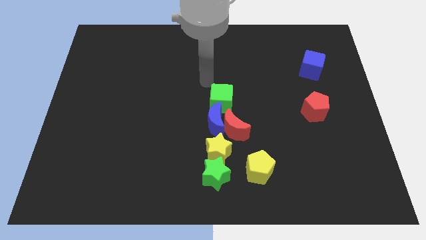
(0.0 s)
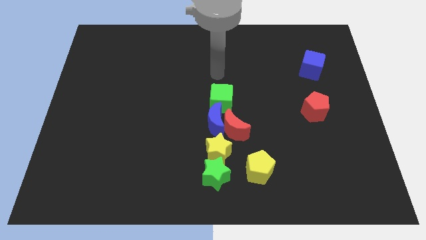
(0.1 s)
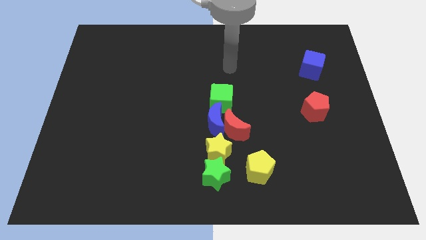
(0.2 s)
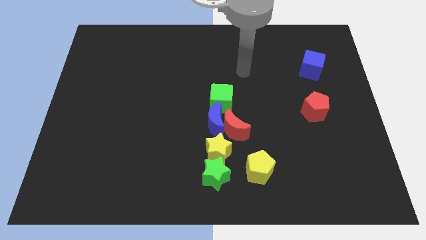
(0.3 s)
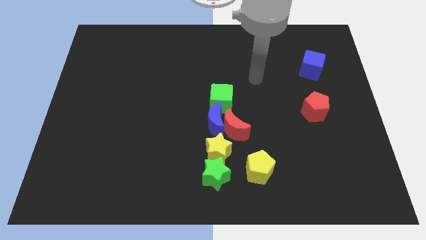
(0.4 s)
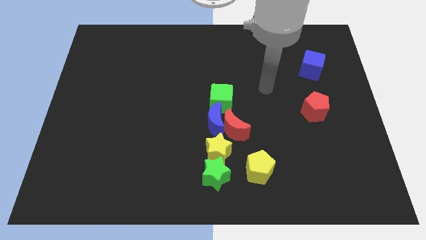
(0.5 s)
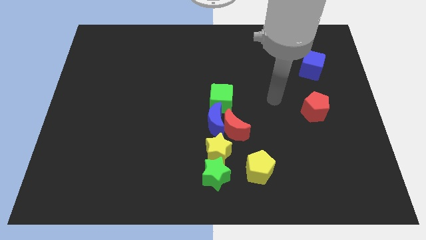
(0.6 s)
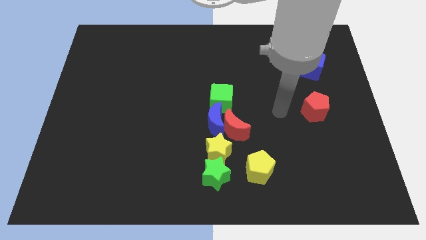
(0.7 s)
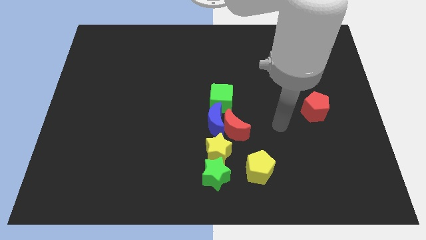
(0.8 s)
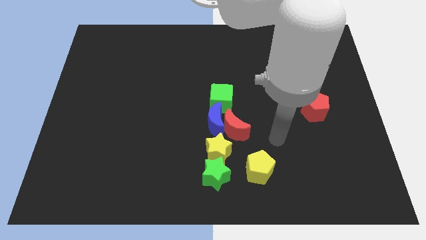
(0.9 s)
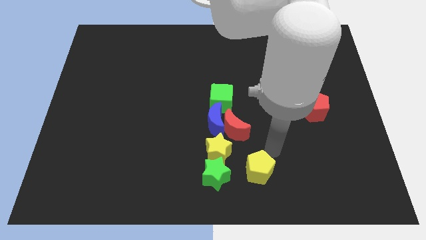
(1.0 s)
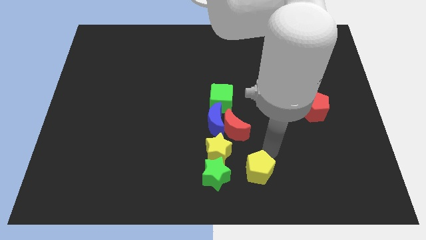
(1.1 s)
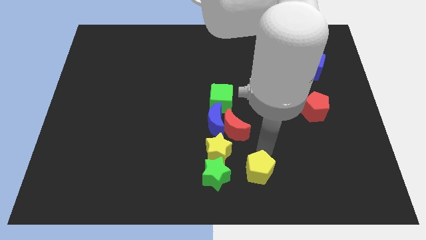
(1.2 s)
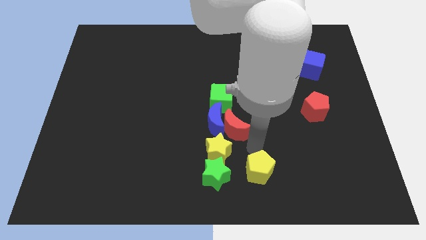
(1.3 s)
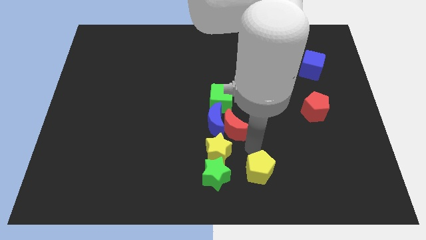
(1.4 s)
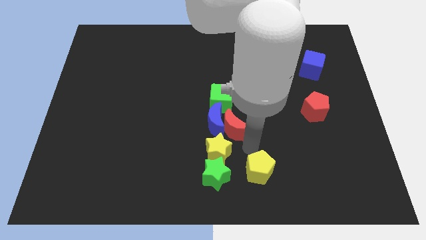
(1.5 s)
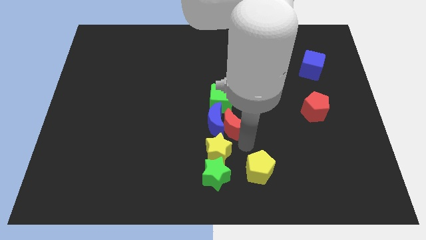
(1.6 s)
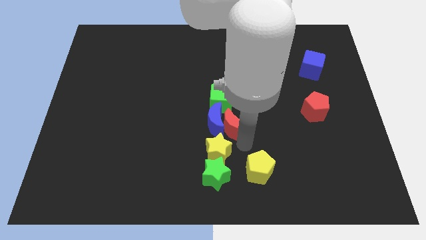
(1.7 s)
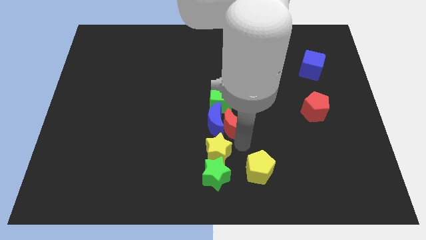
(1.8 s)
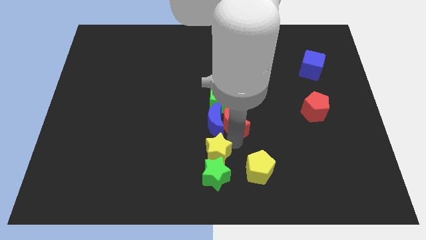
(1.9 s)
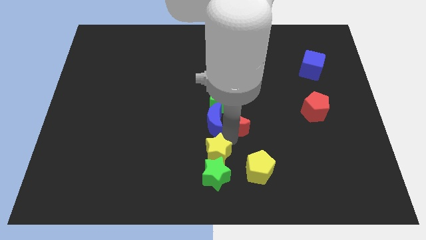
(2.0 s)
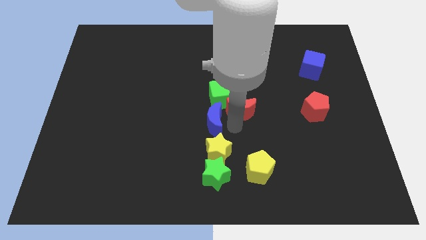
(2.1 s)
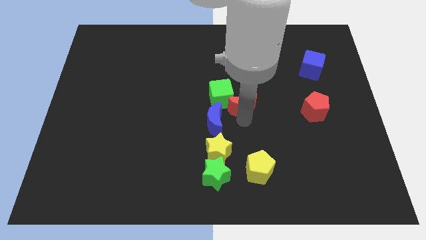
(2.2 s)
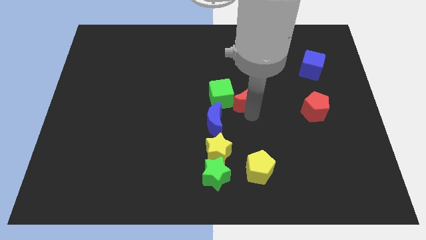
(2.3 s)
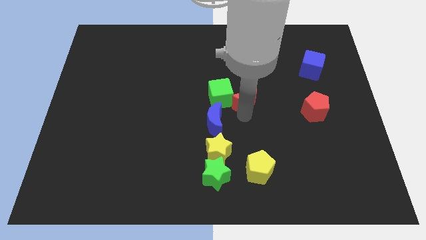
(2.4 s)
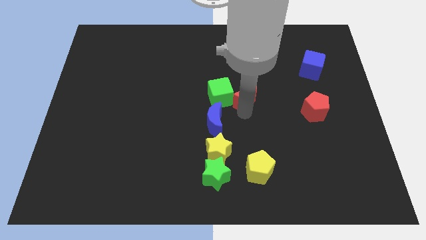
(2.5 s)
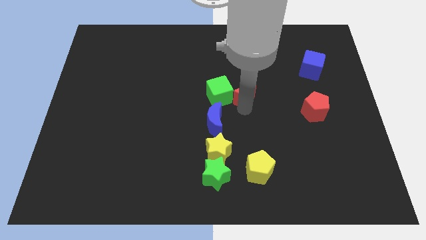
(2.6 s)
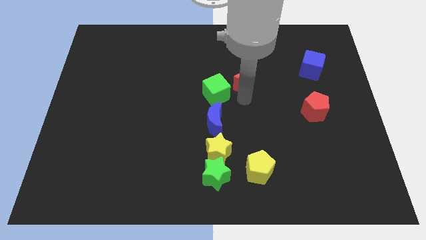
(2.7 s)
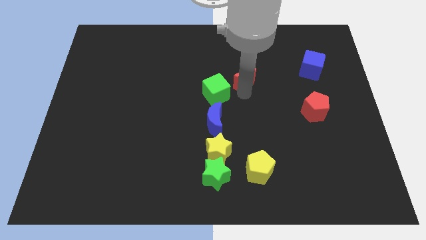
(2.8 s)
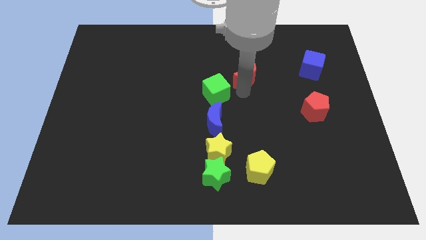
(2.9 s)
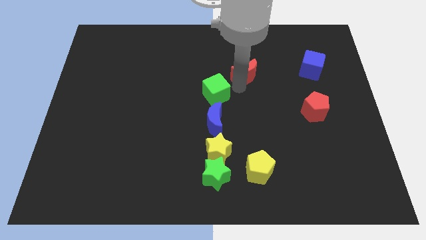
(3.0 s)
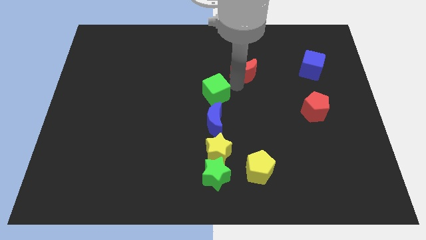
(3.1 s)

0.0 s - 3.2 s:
slide the red crescent towards the top side of the board

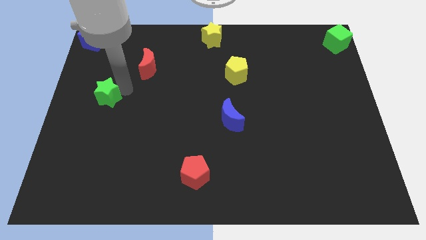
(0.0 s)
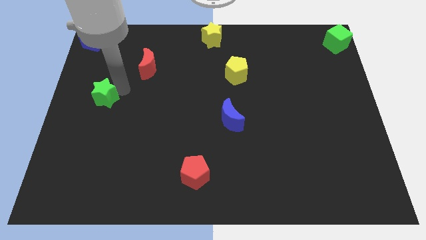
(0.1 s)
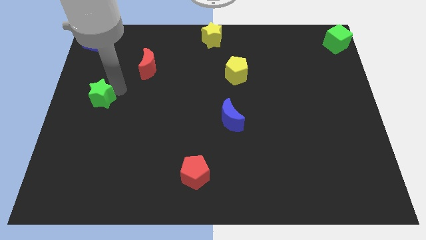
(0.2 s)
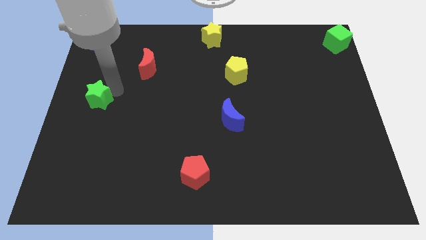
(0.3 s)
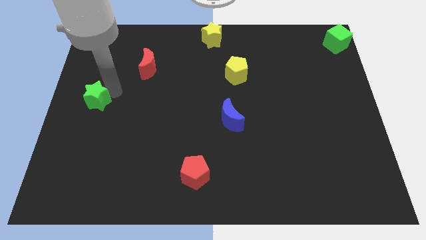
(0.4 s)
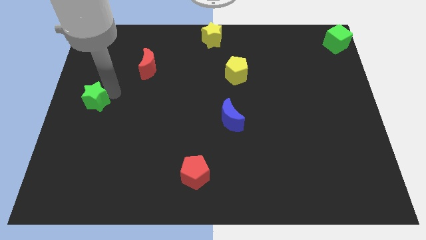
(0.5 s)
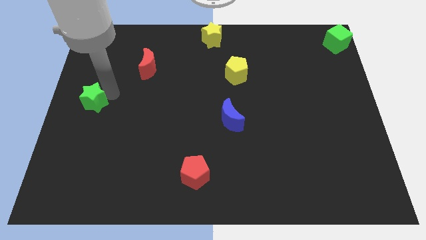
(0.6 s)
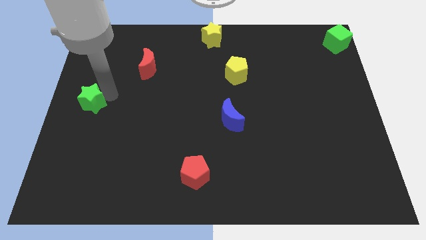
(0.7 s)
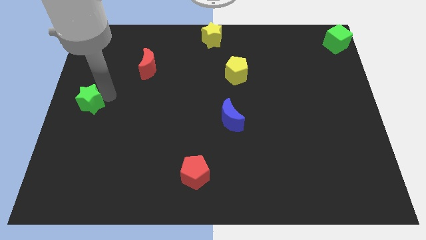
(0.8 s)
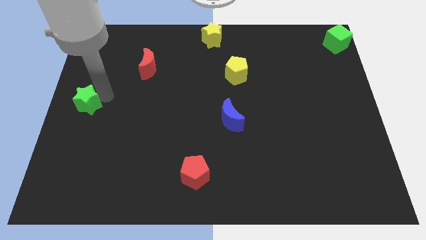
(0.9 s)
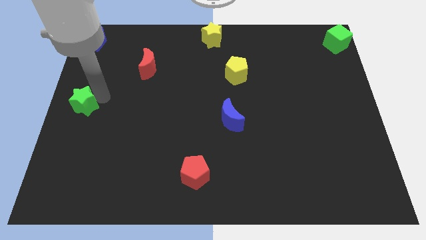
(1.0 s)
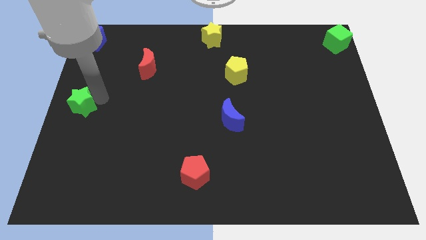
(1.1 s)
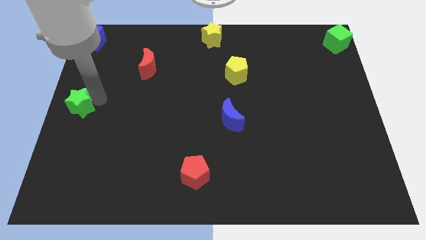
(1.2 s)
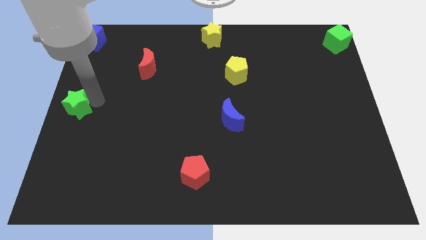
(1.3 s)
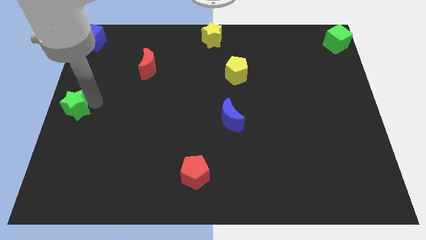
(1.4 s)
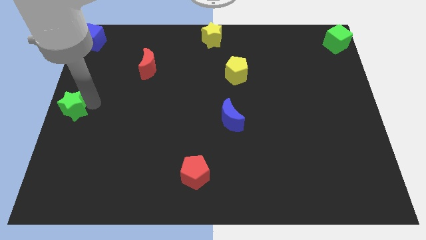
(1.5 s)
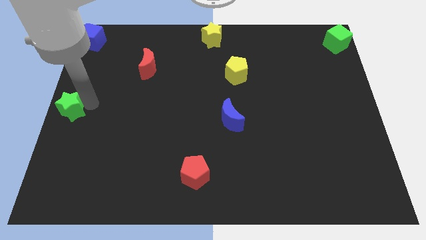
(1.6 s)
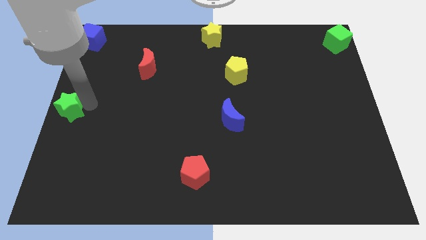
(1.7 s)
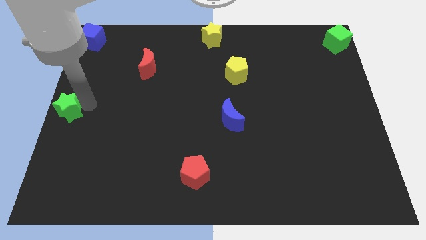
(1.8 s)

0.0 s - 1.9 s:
push the green star towards the left center of the board

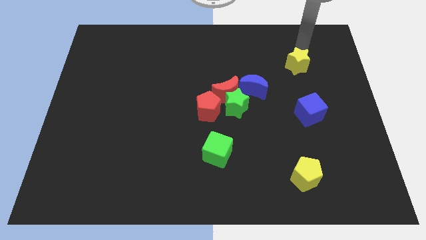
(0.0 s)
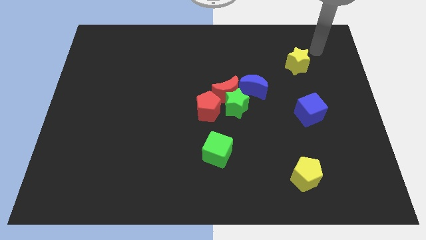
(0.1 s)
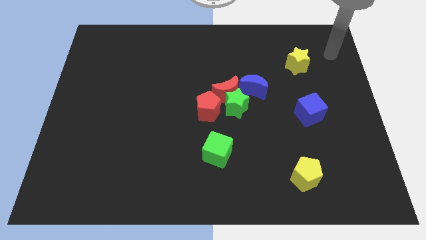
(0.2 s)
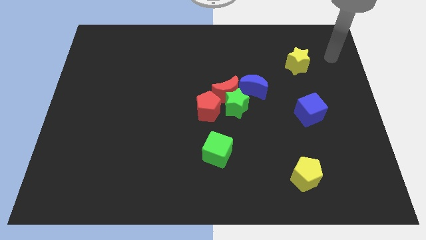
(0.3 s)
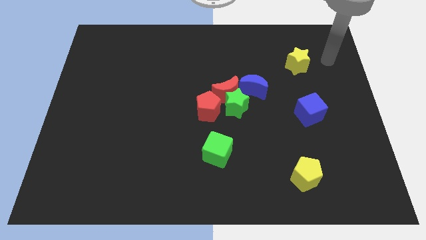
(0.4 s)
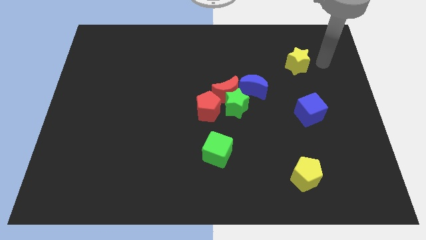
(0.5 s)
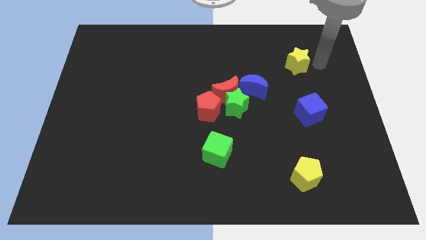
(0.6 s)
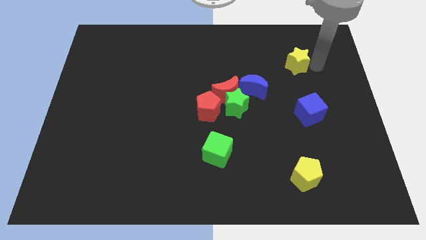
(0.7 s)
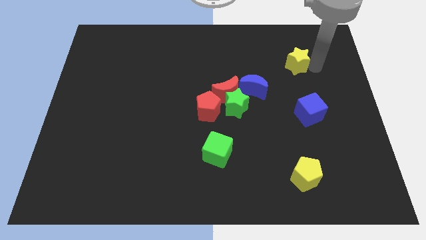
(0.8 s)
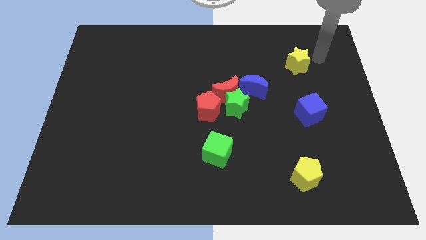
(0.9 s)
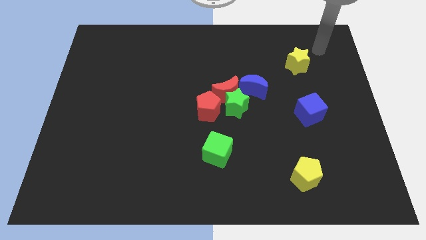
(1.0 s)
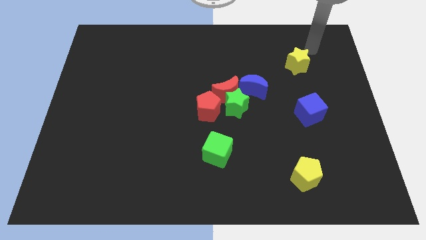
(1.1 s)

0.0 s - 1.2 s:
place your arm to the top right of yellow star

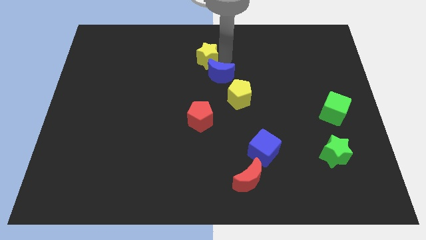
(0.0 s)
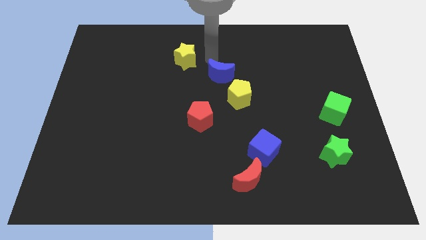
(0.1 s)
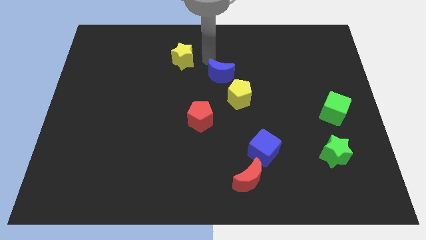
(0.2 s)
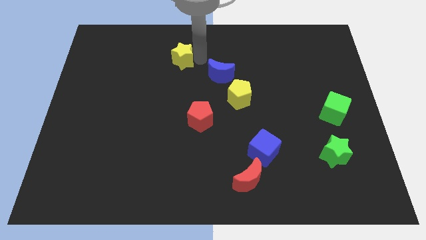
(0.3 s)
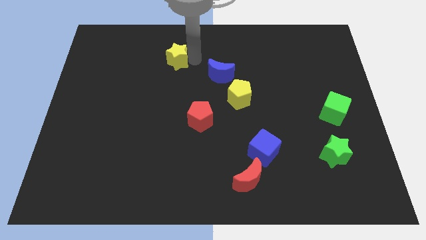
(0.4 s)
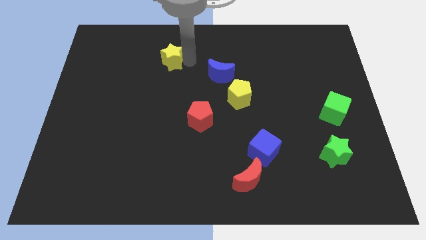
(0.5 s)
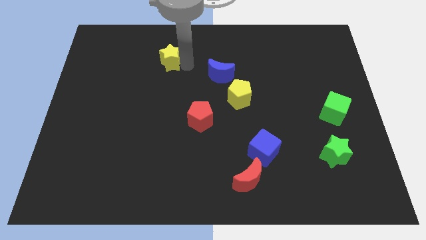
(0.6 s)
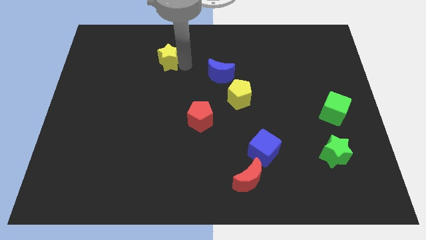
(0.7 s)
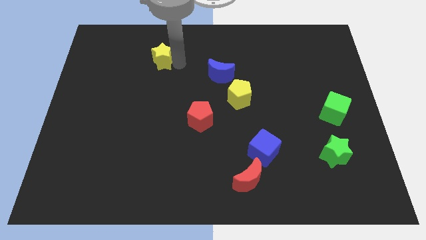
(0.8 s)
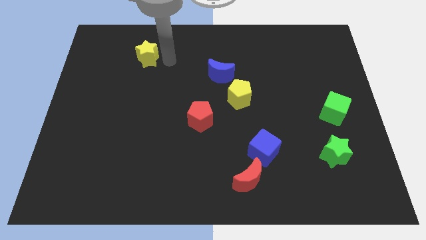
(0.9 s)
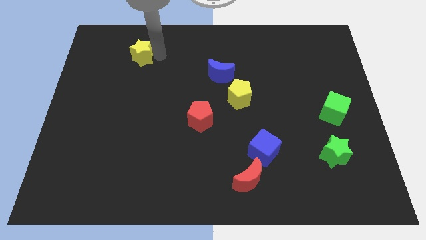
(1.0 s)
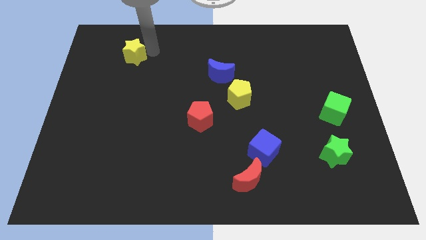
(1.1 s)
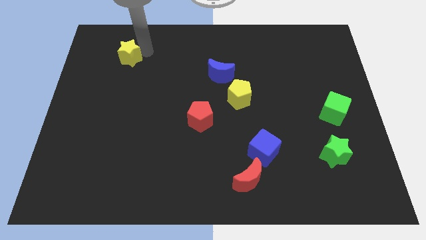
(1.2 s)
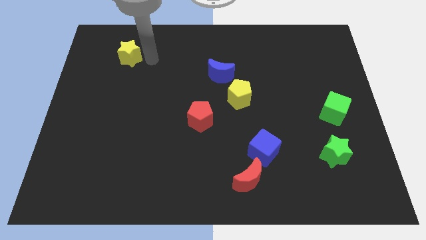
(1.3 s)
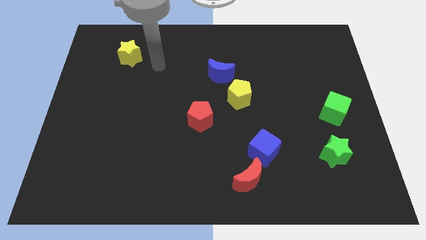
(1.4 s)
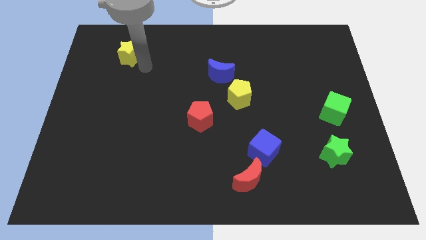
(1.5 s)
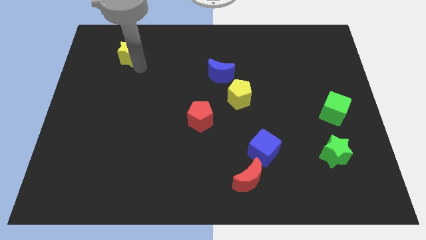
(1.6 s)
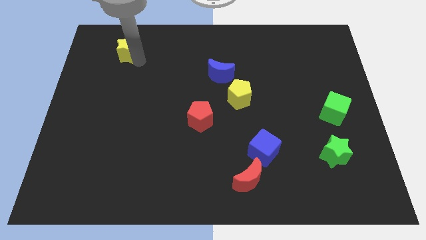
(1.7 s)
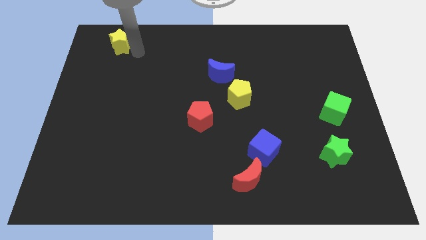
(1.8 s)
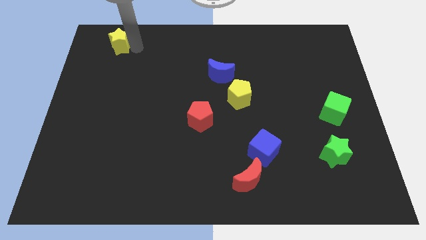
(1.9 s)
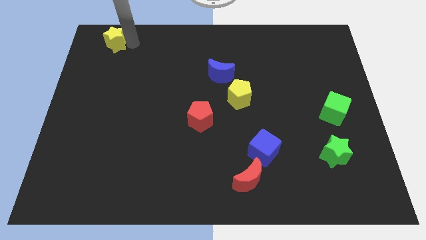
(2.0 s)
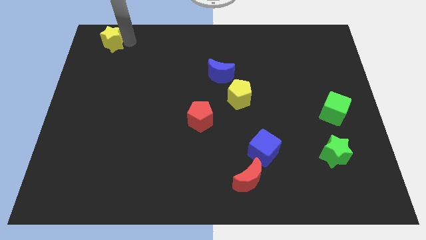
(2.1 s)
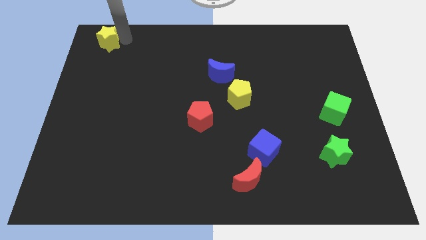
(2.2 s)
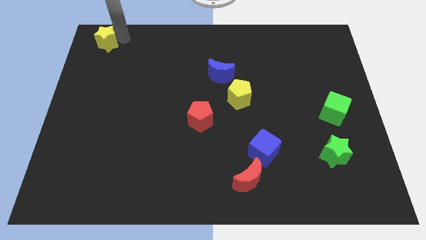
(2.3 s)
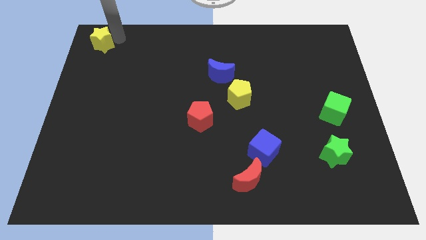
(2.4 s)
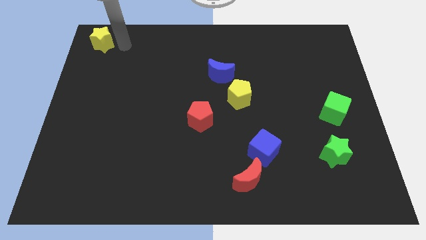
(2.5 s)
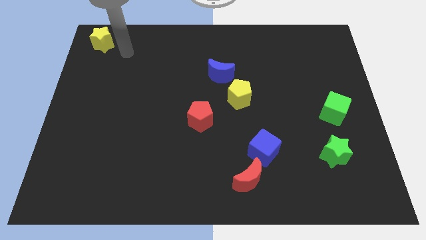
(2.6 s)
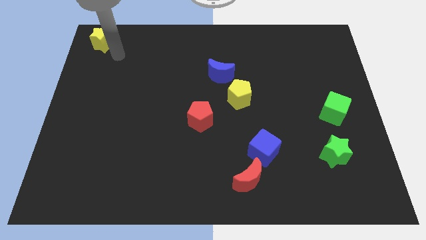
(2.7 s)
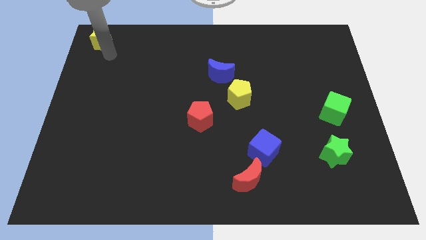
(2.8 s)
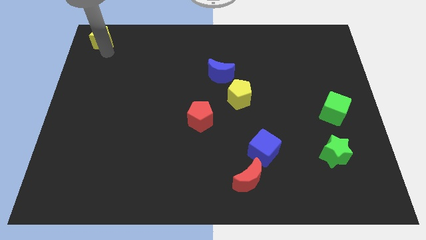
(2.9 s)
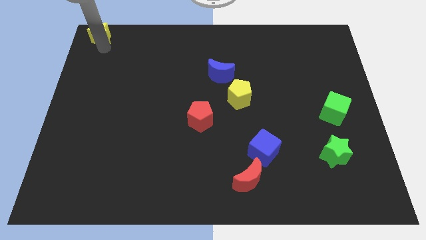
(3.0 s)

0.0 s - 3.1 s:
move yellow star towards top left
